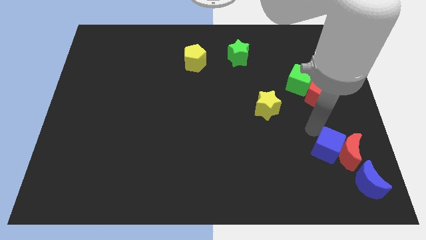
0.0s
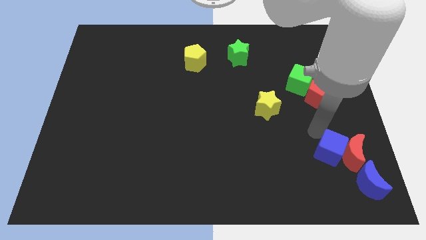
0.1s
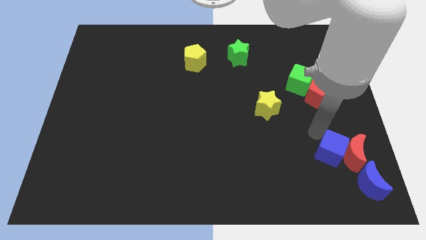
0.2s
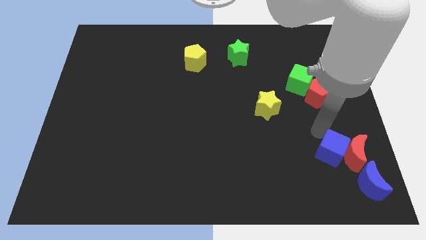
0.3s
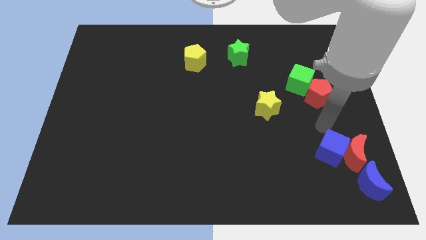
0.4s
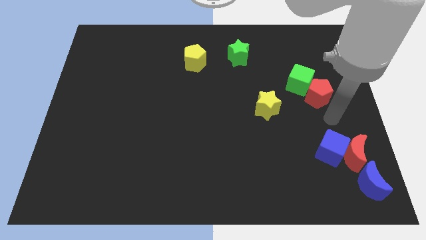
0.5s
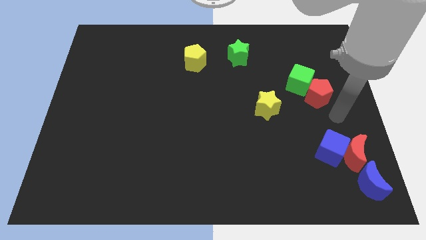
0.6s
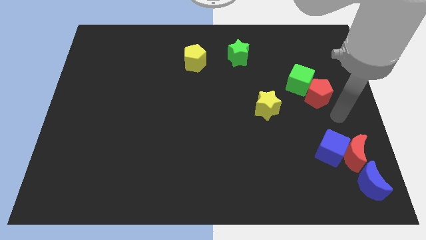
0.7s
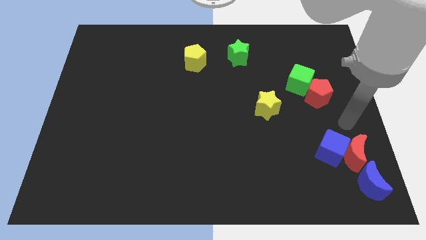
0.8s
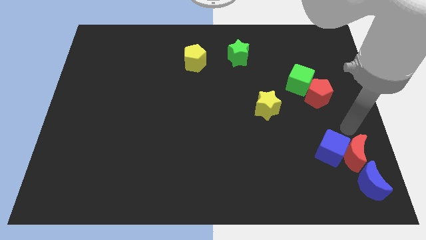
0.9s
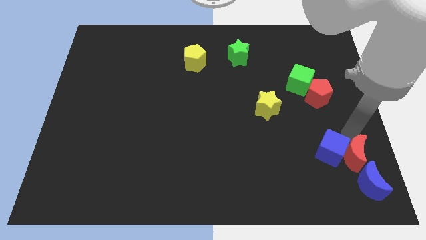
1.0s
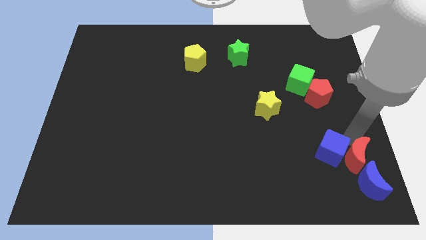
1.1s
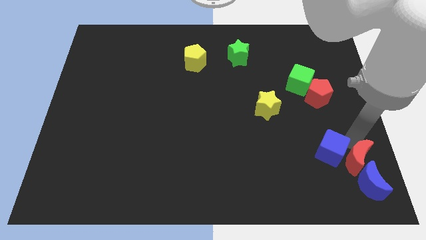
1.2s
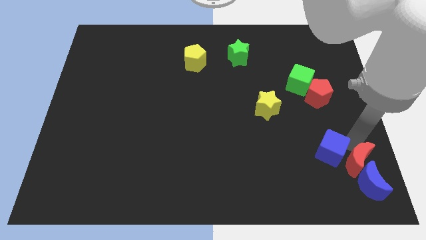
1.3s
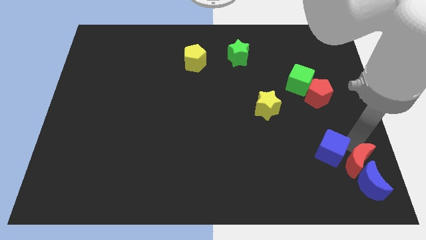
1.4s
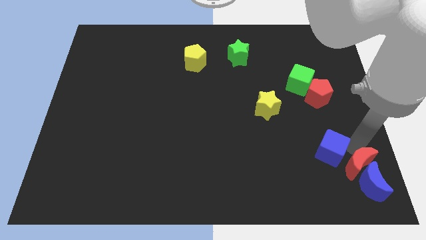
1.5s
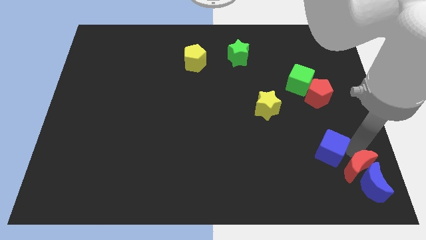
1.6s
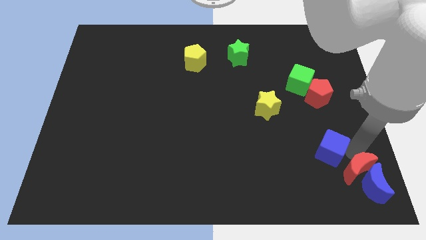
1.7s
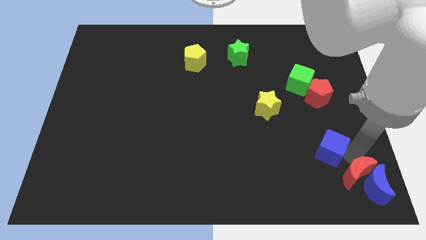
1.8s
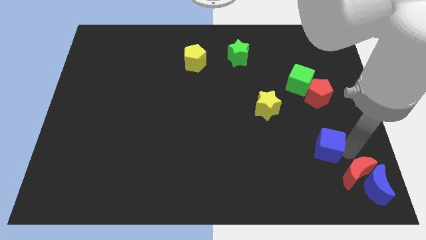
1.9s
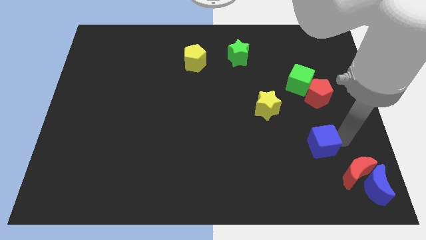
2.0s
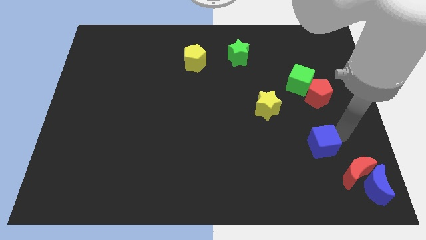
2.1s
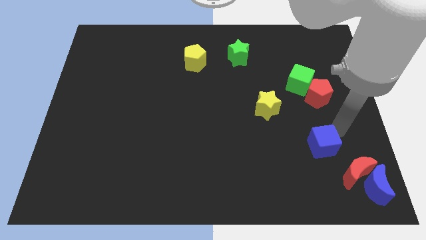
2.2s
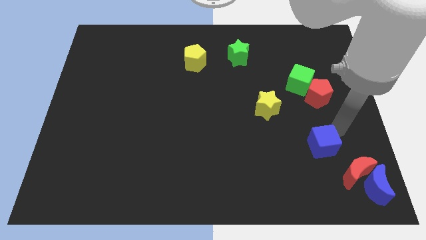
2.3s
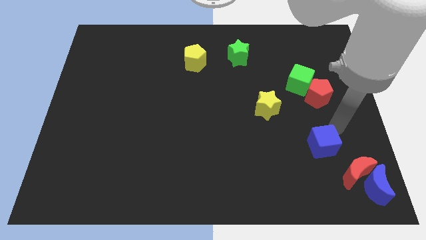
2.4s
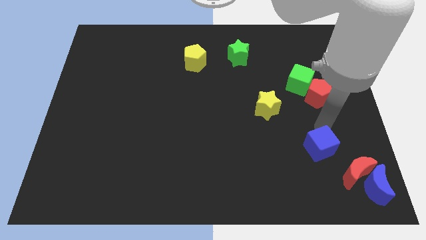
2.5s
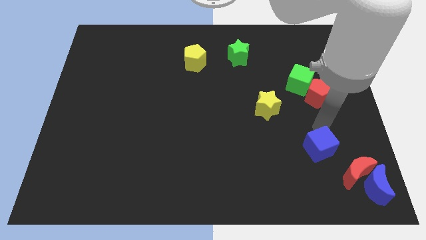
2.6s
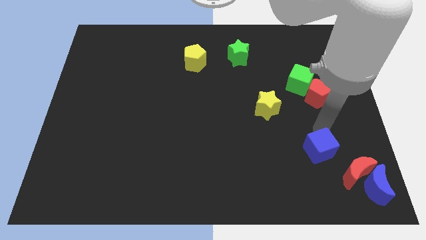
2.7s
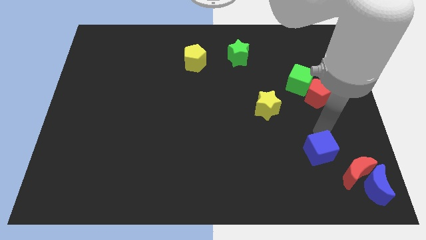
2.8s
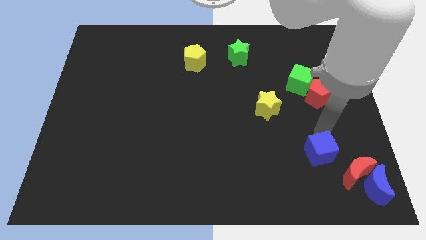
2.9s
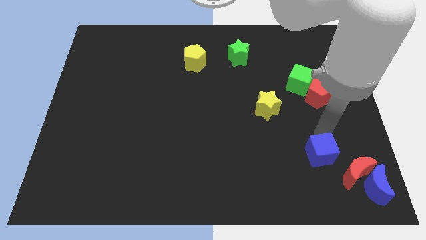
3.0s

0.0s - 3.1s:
separate blue cube and red moon

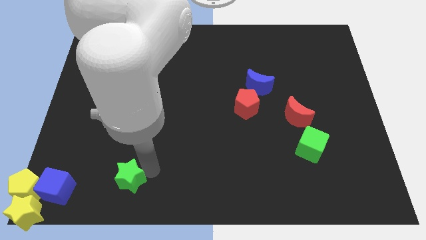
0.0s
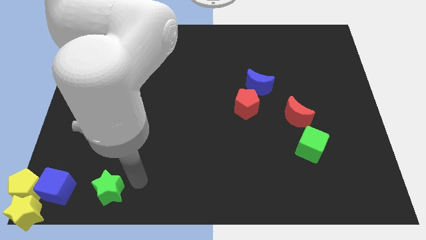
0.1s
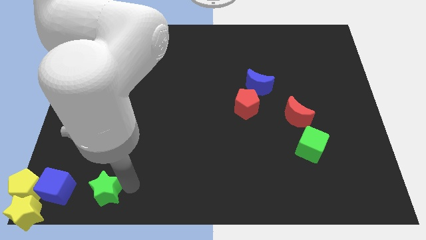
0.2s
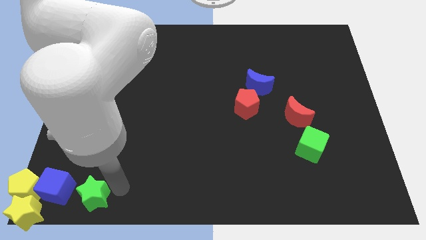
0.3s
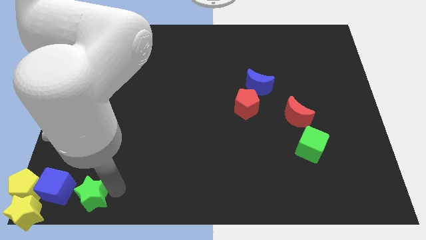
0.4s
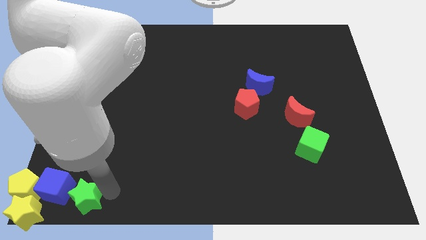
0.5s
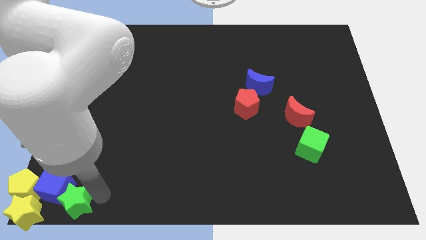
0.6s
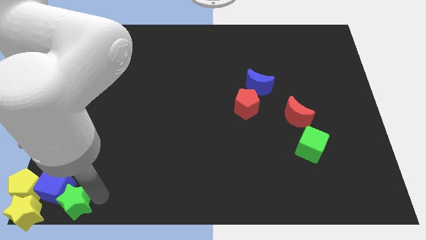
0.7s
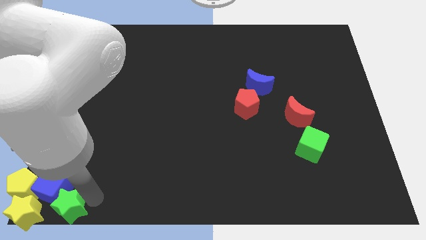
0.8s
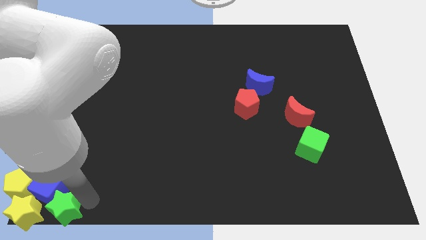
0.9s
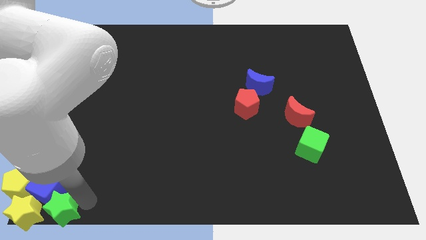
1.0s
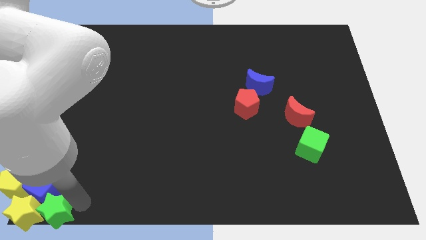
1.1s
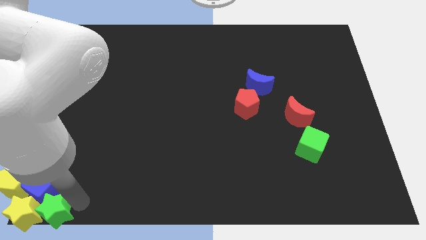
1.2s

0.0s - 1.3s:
slide the green star into the yellow star

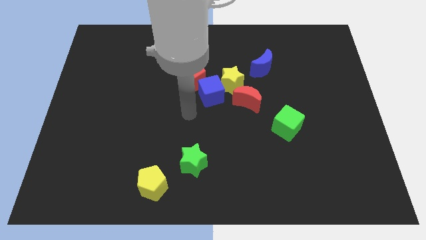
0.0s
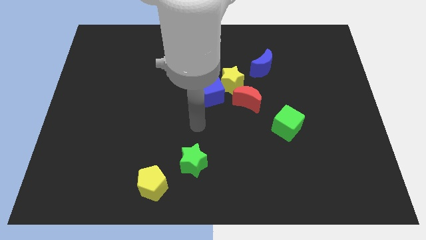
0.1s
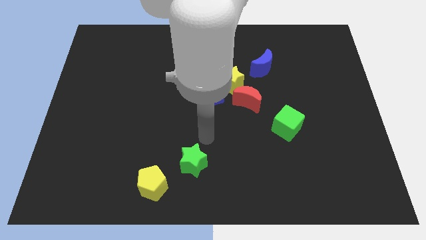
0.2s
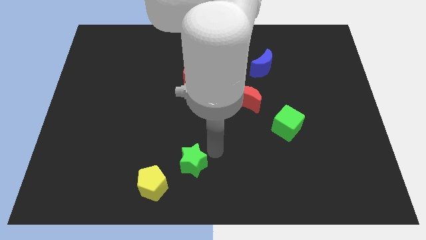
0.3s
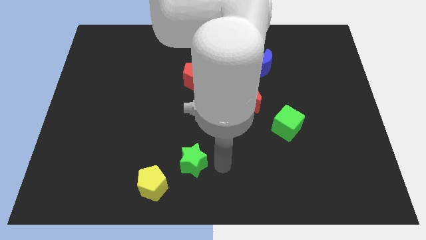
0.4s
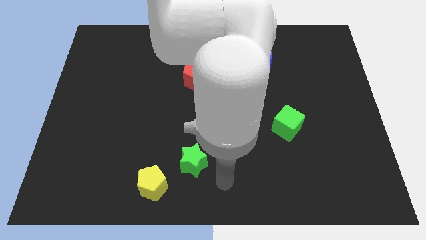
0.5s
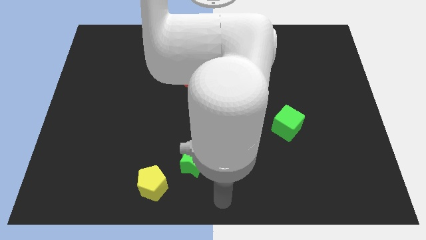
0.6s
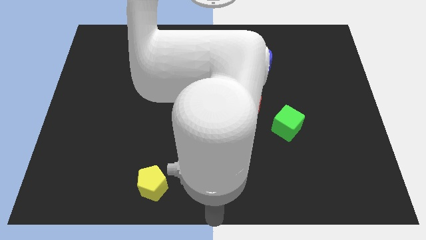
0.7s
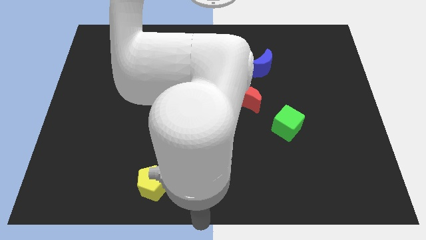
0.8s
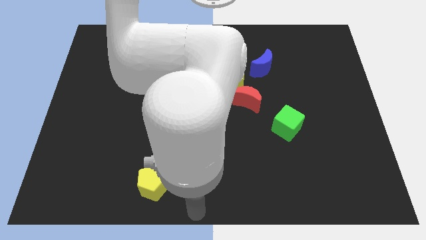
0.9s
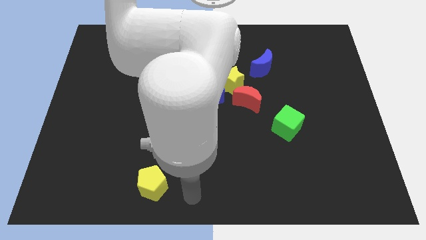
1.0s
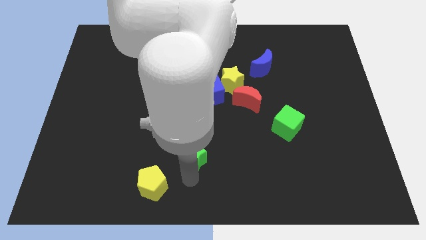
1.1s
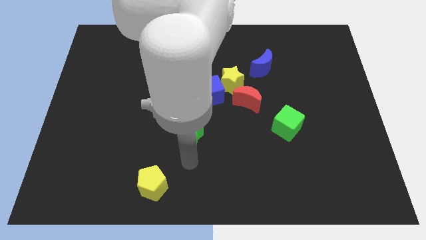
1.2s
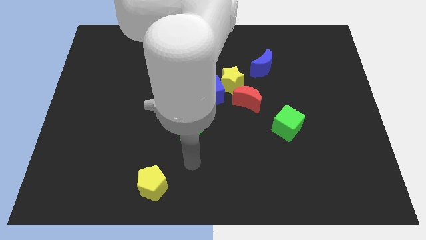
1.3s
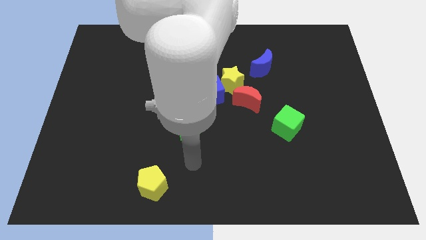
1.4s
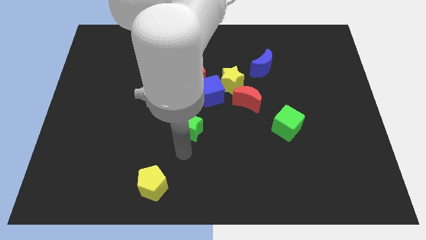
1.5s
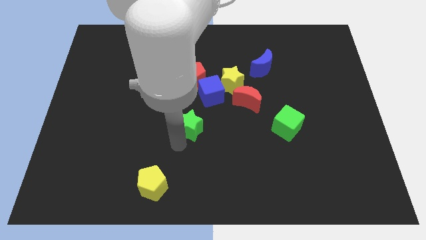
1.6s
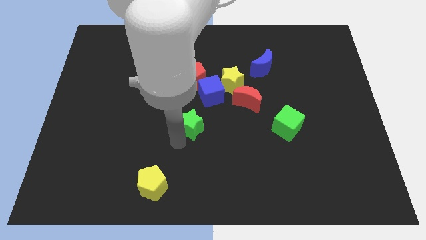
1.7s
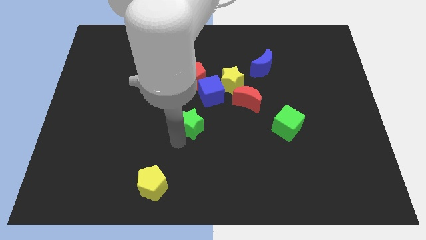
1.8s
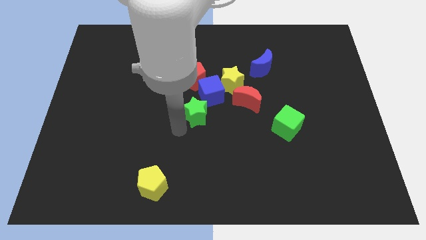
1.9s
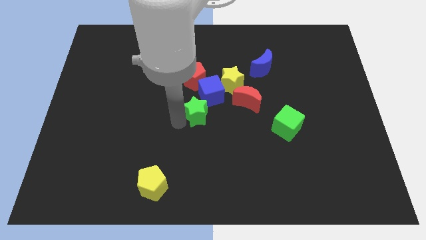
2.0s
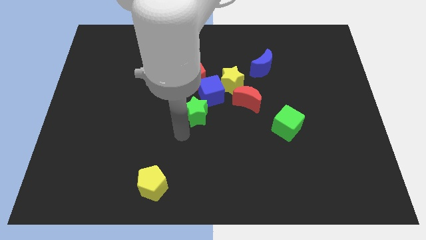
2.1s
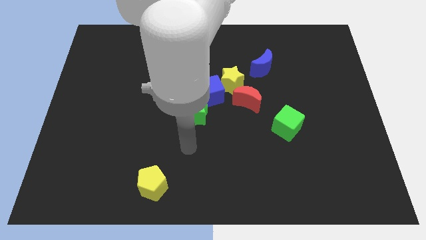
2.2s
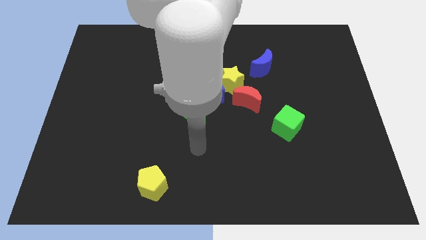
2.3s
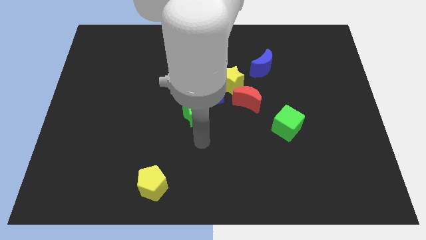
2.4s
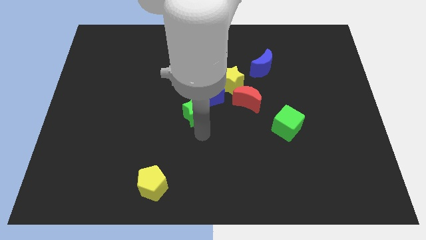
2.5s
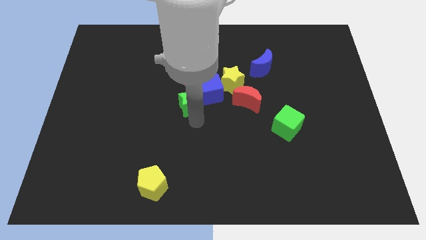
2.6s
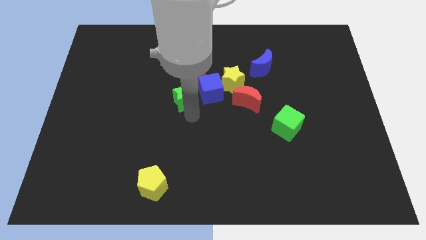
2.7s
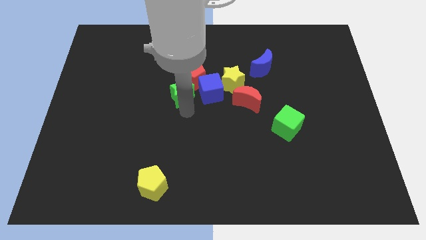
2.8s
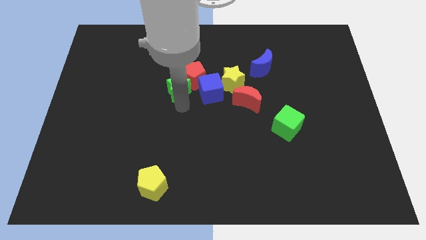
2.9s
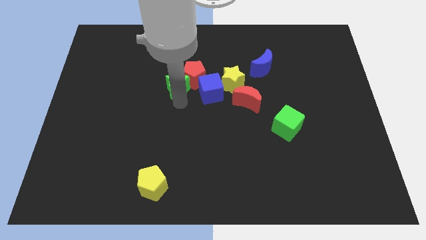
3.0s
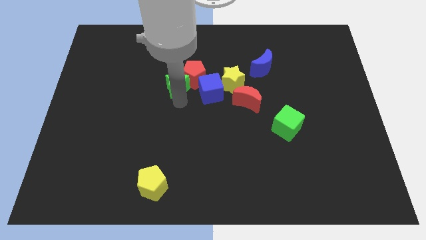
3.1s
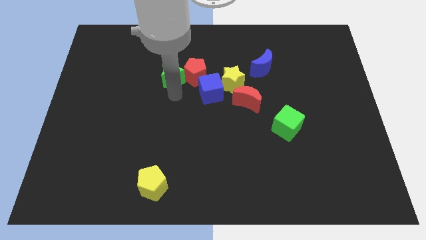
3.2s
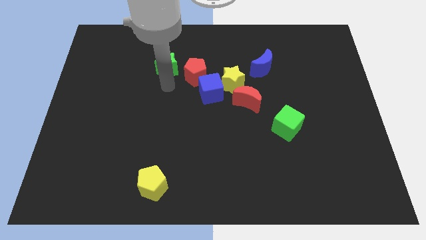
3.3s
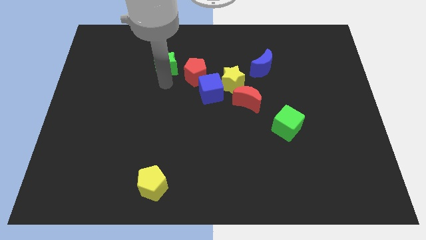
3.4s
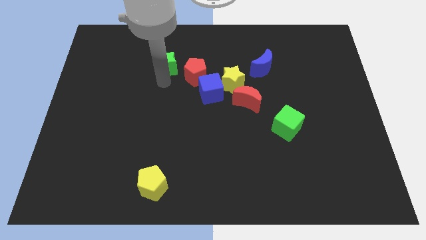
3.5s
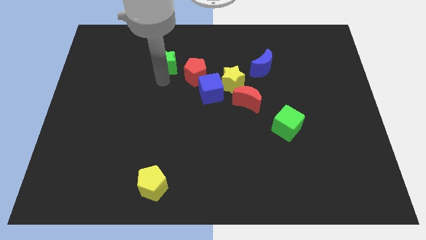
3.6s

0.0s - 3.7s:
move green star towards the red pentagon

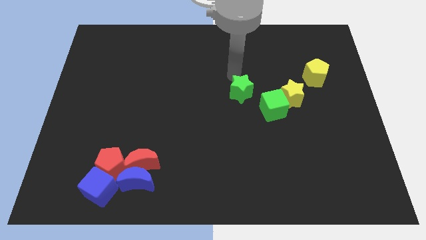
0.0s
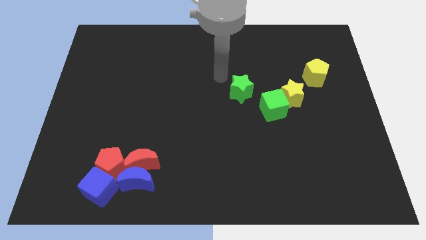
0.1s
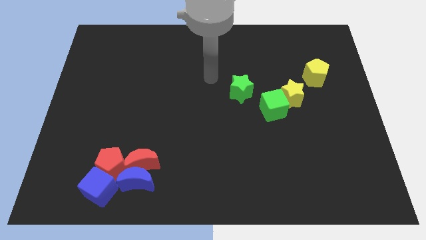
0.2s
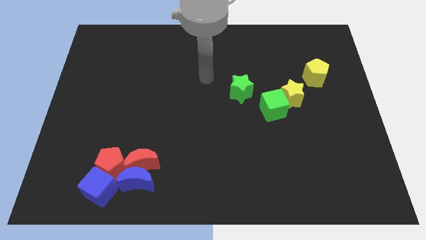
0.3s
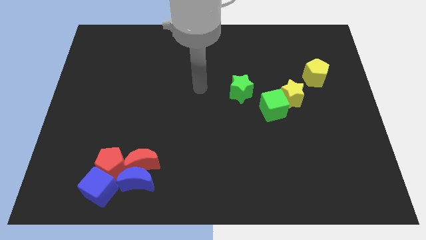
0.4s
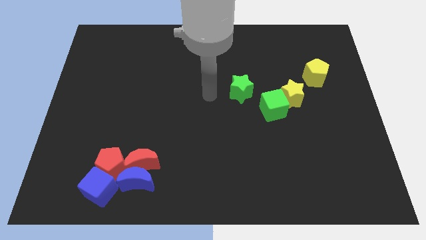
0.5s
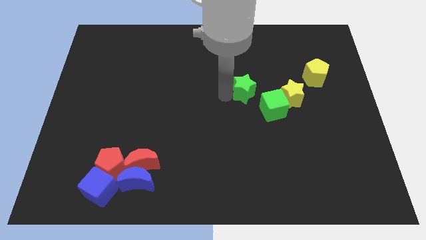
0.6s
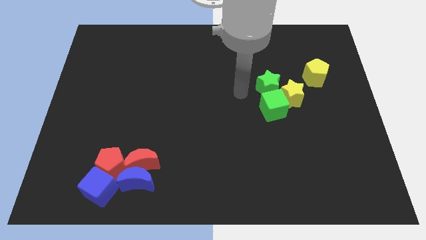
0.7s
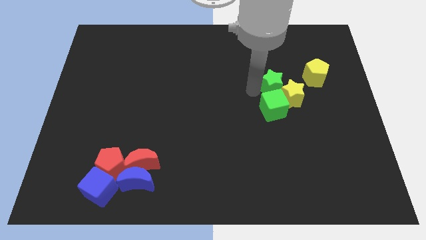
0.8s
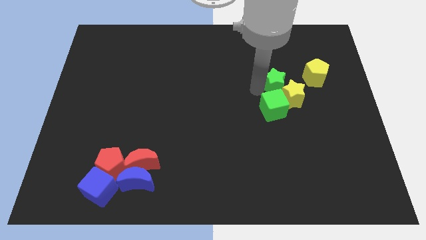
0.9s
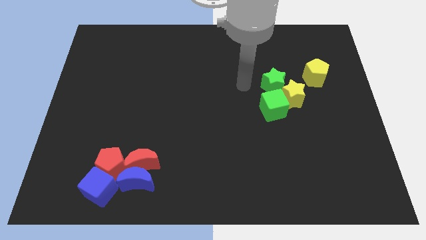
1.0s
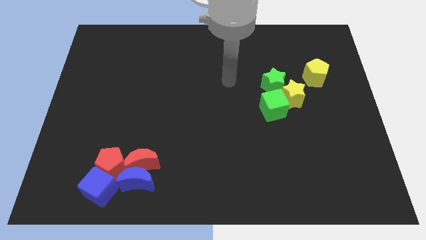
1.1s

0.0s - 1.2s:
move green star towards the yellow pentagon
